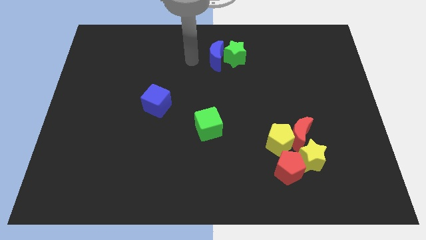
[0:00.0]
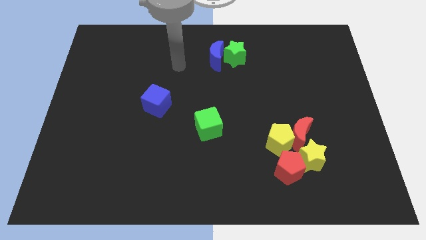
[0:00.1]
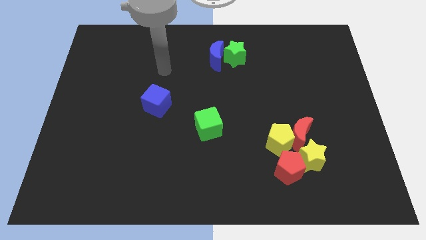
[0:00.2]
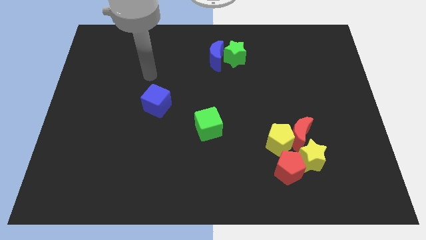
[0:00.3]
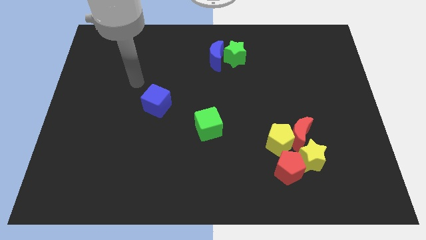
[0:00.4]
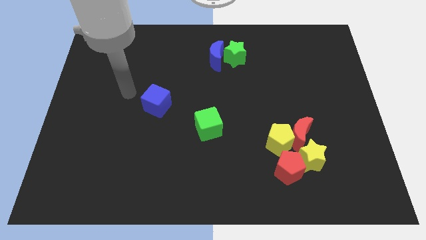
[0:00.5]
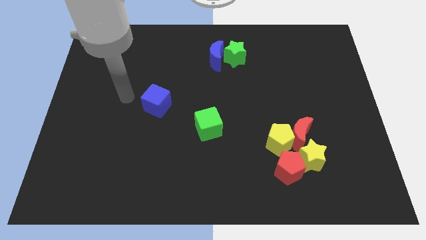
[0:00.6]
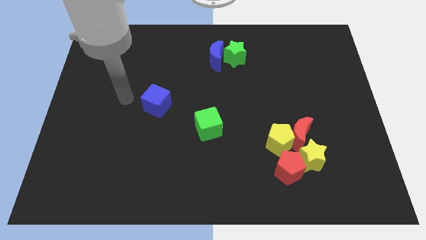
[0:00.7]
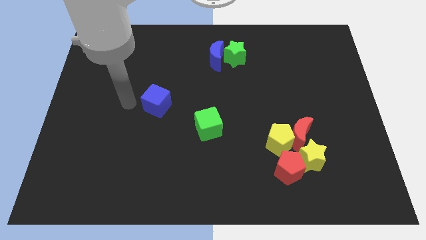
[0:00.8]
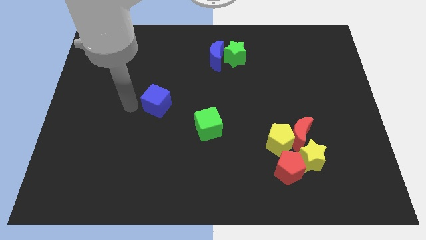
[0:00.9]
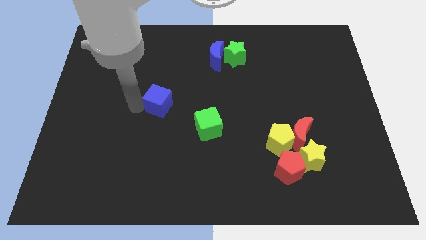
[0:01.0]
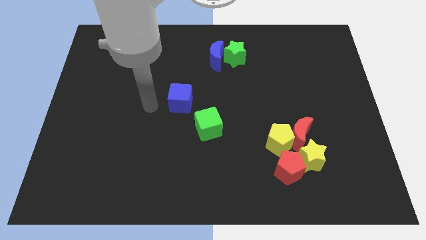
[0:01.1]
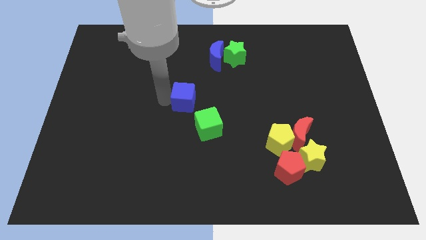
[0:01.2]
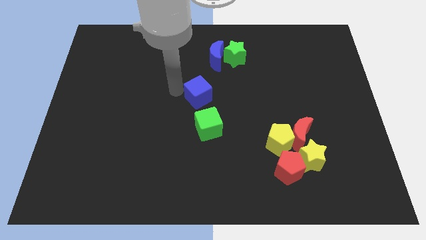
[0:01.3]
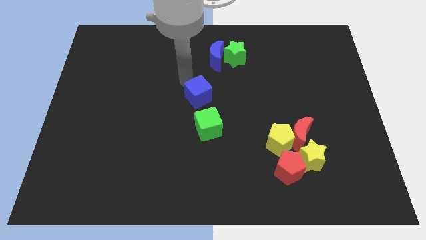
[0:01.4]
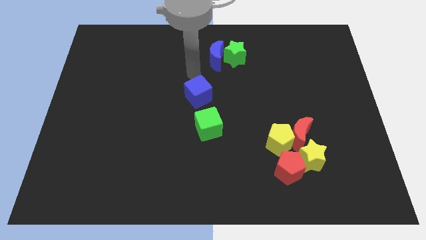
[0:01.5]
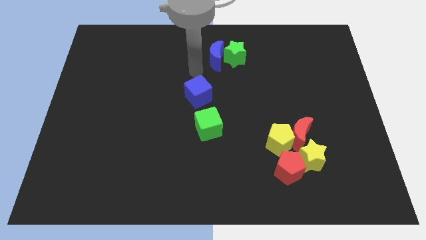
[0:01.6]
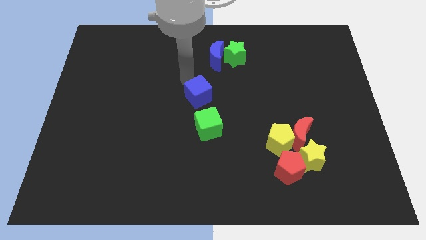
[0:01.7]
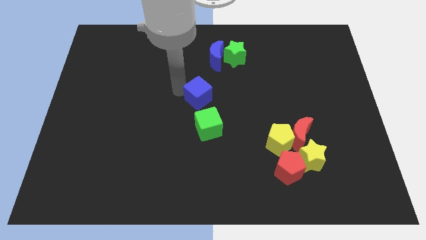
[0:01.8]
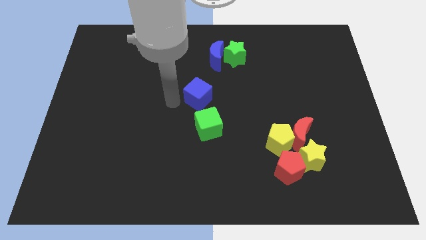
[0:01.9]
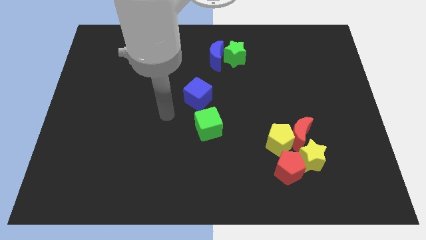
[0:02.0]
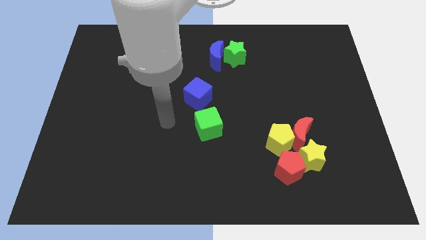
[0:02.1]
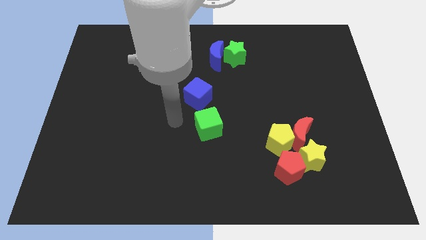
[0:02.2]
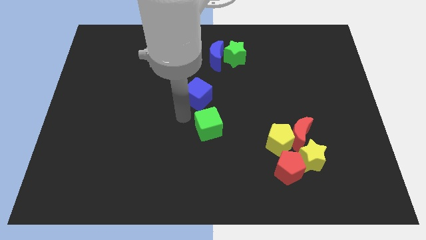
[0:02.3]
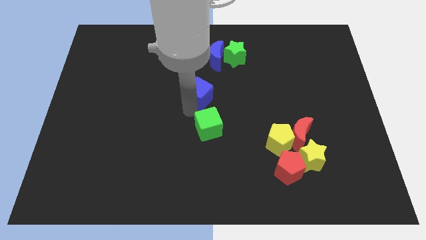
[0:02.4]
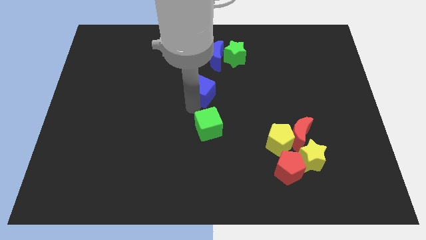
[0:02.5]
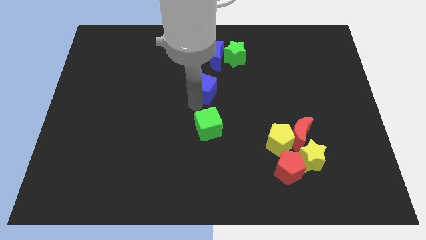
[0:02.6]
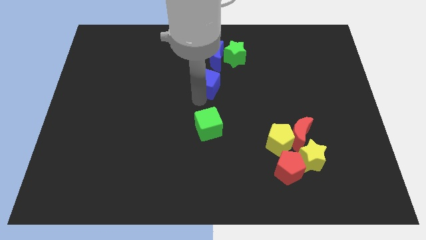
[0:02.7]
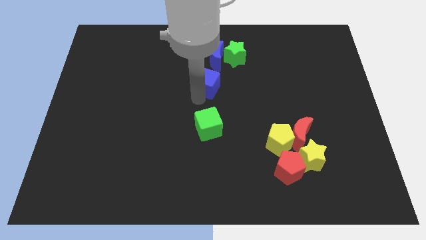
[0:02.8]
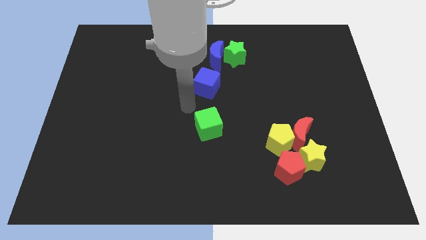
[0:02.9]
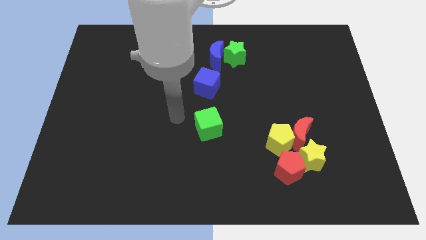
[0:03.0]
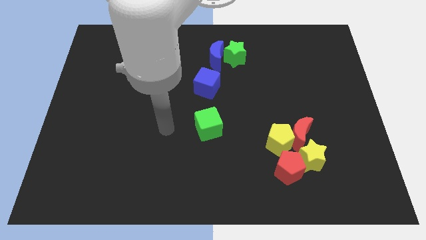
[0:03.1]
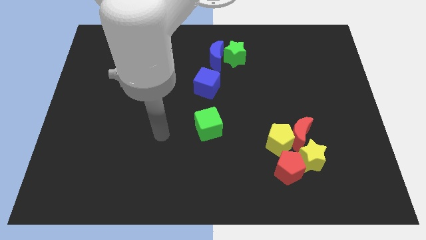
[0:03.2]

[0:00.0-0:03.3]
push the blue cube towards the blue crescent

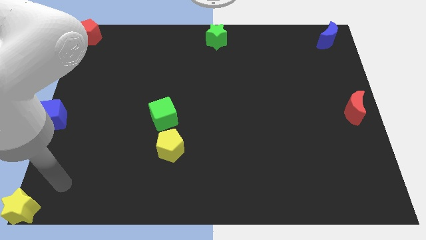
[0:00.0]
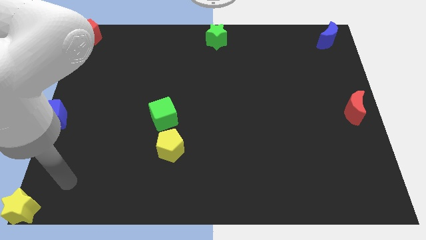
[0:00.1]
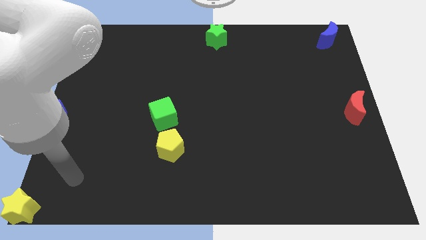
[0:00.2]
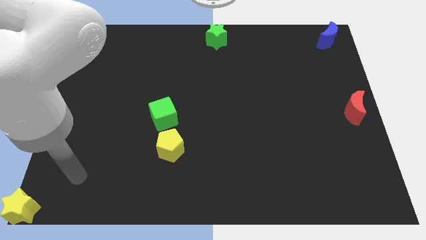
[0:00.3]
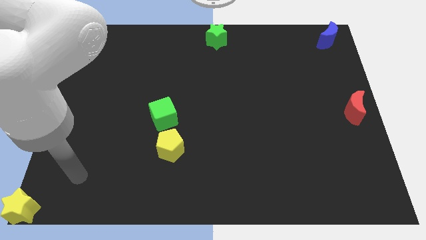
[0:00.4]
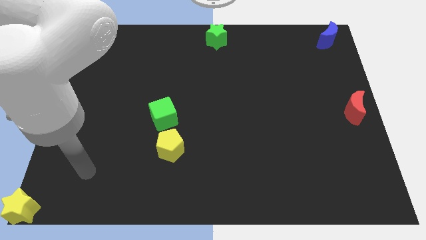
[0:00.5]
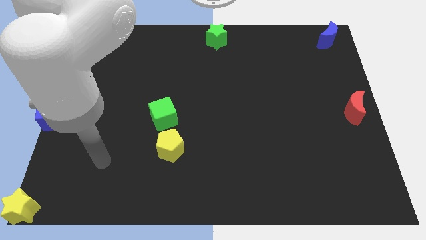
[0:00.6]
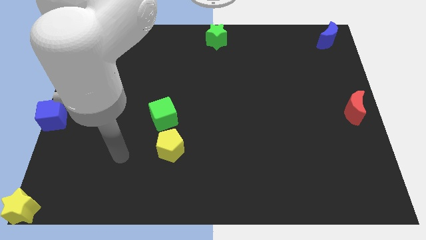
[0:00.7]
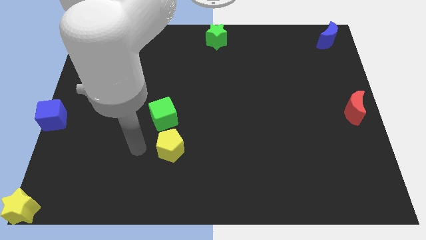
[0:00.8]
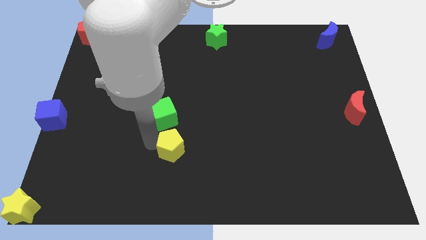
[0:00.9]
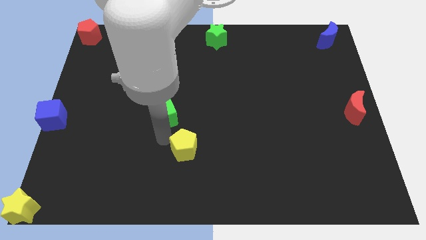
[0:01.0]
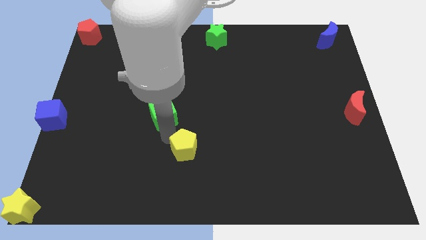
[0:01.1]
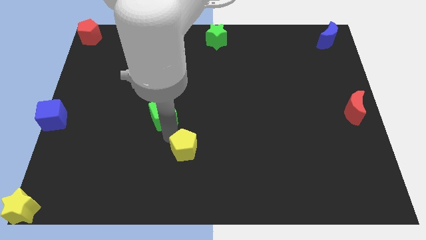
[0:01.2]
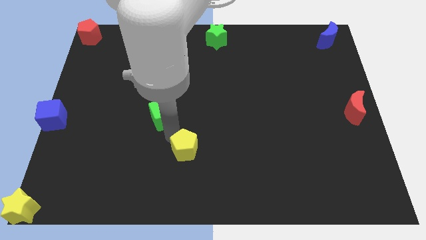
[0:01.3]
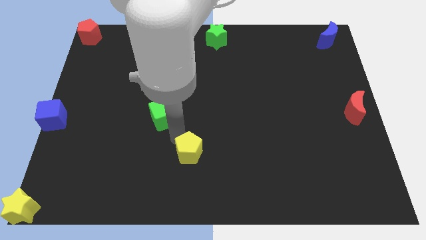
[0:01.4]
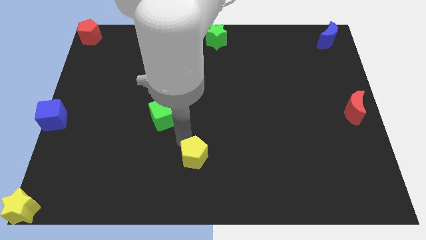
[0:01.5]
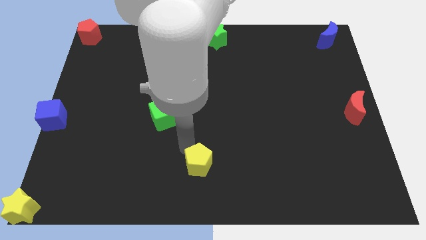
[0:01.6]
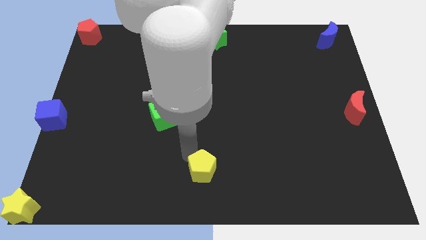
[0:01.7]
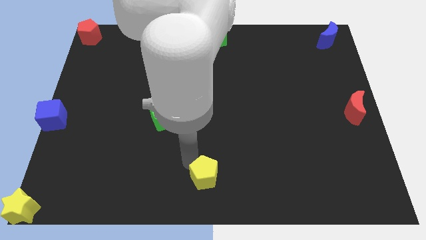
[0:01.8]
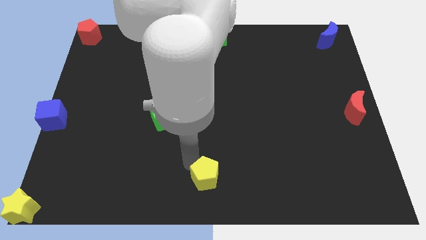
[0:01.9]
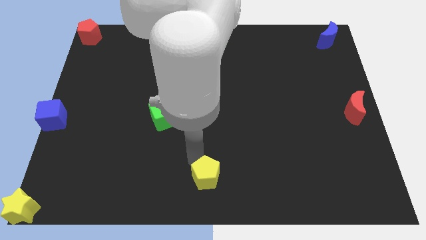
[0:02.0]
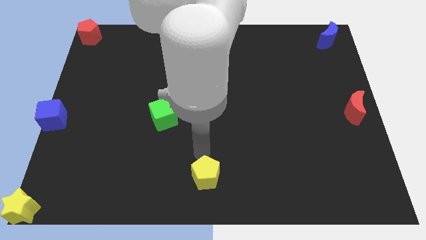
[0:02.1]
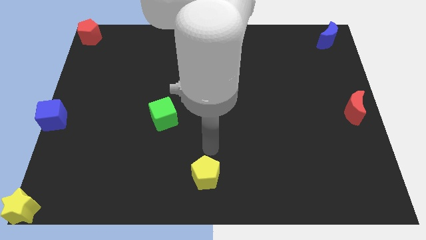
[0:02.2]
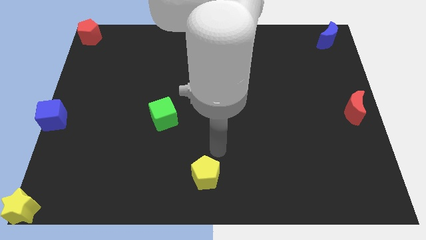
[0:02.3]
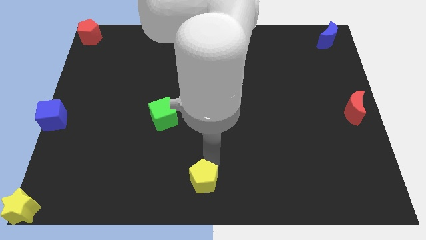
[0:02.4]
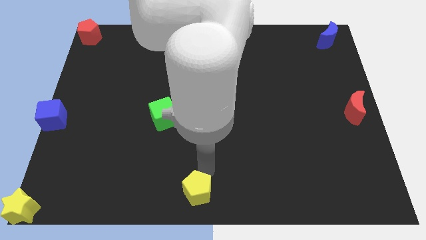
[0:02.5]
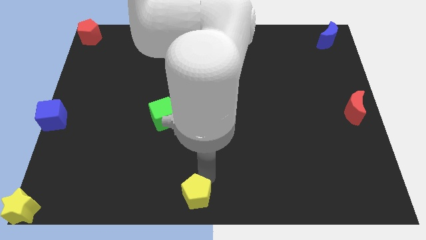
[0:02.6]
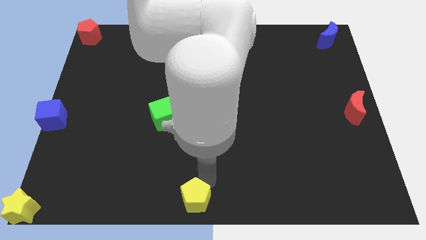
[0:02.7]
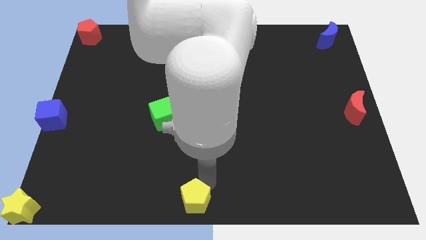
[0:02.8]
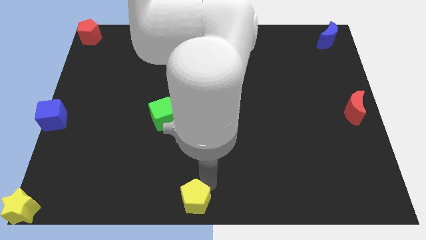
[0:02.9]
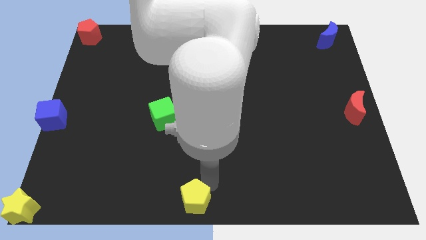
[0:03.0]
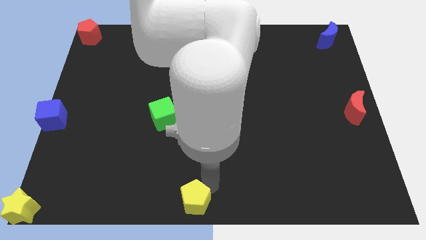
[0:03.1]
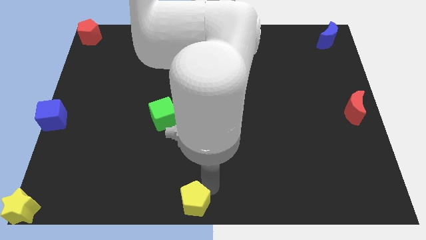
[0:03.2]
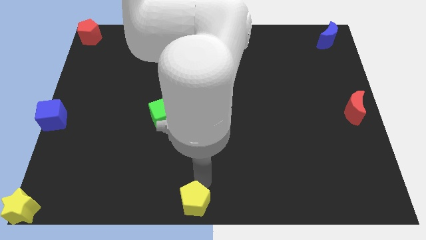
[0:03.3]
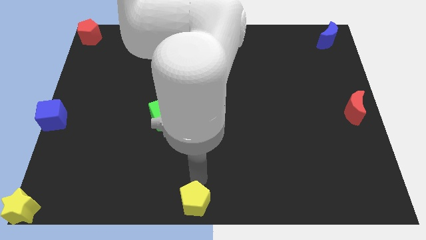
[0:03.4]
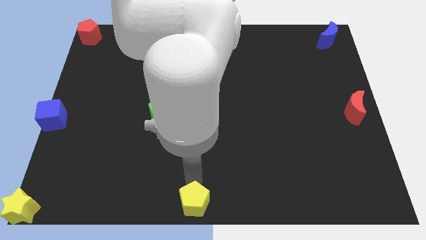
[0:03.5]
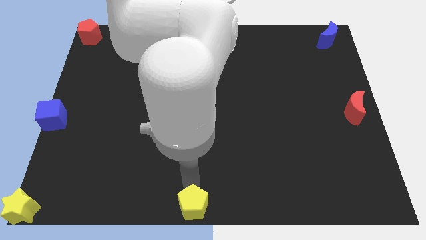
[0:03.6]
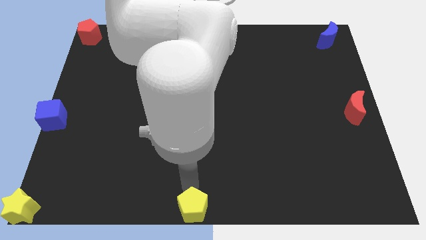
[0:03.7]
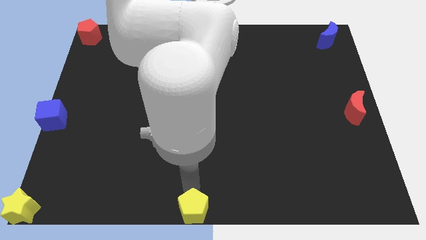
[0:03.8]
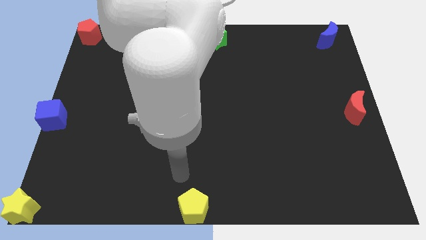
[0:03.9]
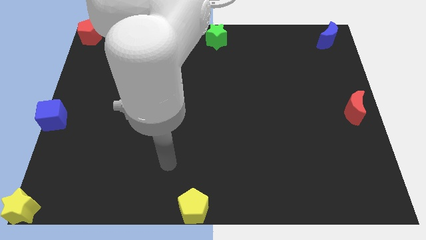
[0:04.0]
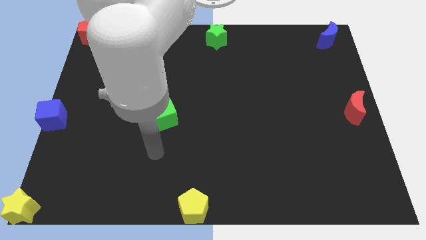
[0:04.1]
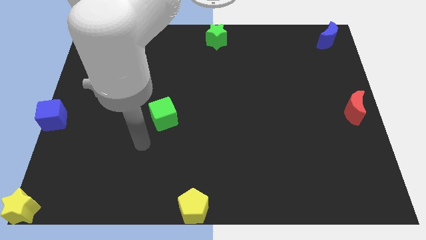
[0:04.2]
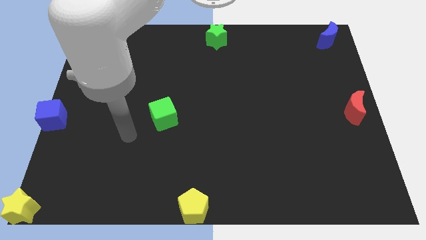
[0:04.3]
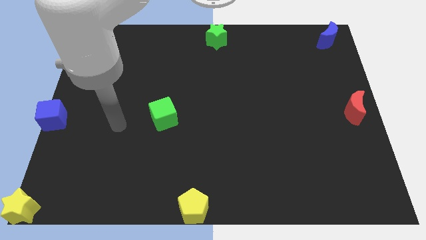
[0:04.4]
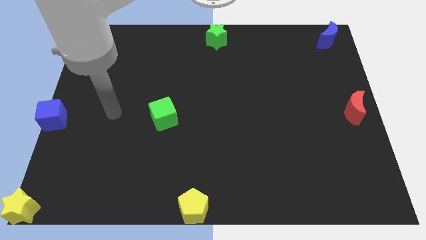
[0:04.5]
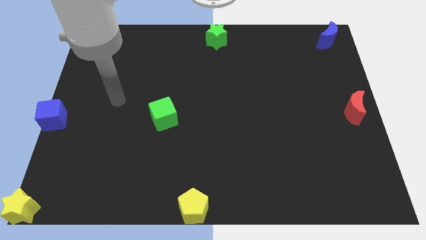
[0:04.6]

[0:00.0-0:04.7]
push the yellow pentagon towards the bottom center of the board

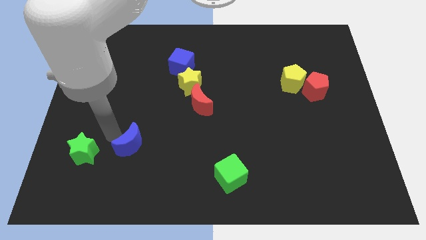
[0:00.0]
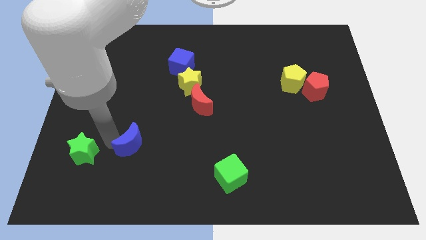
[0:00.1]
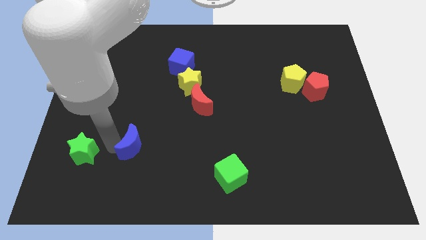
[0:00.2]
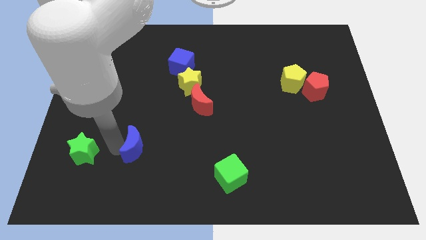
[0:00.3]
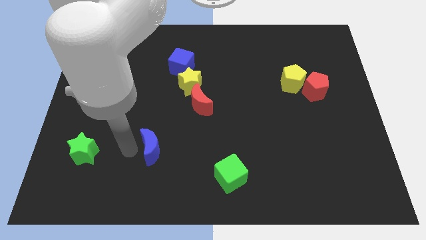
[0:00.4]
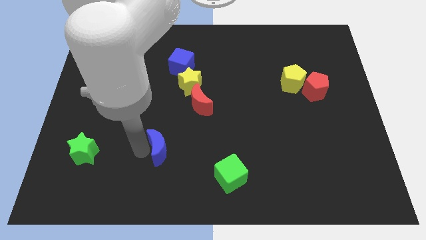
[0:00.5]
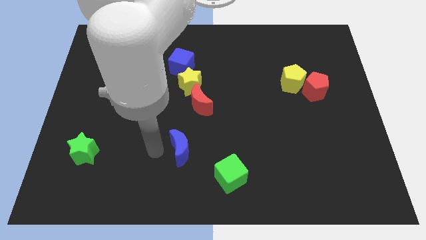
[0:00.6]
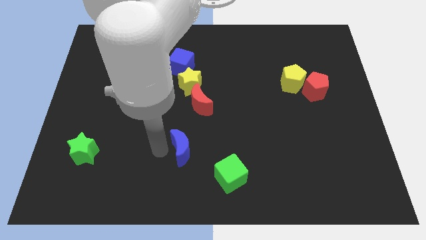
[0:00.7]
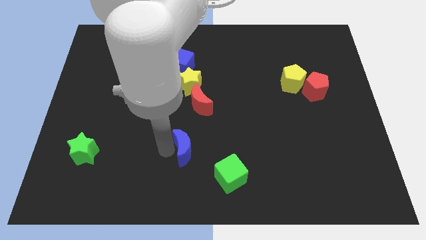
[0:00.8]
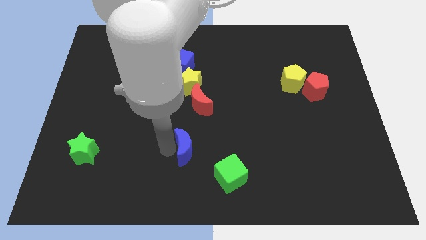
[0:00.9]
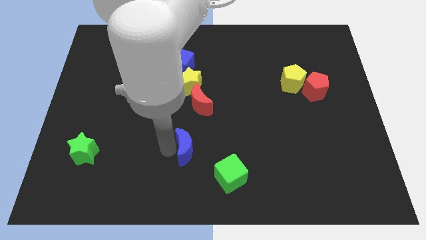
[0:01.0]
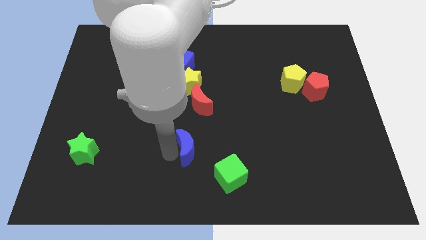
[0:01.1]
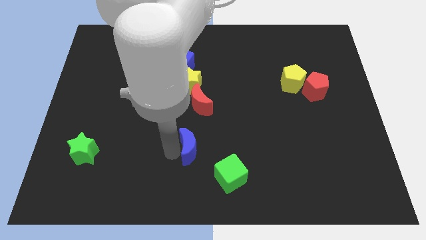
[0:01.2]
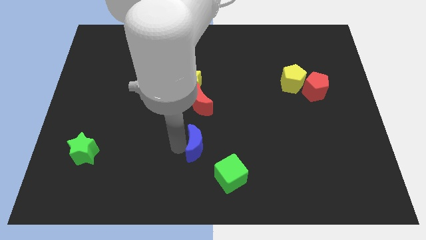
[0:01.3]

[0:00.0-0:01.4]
move the blue moon at the bottom of the yellow star vertically
